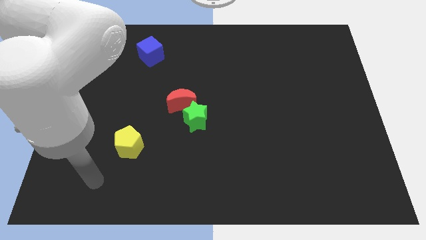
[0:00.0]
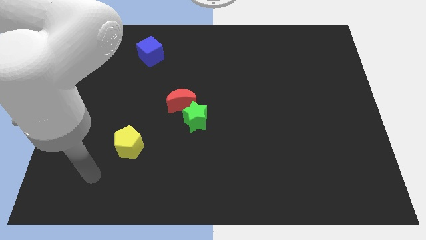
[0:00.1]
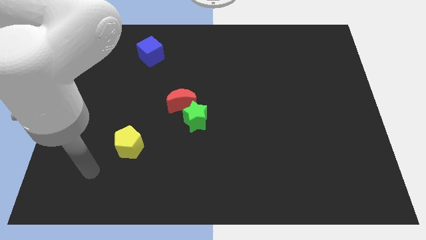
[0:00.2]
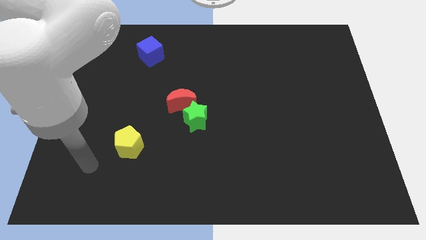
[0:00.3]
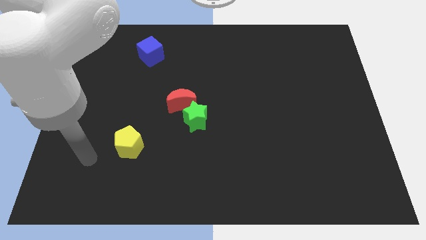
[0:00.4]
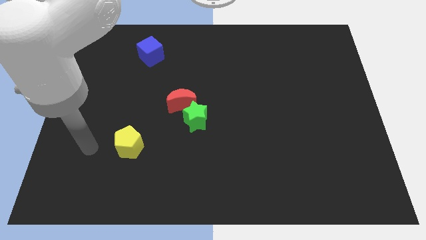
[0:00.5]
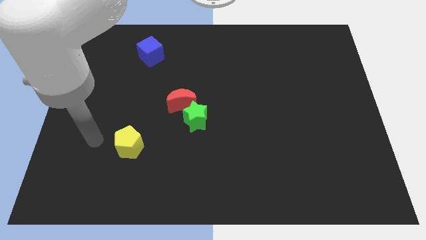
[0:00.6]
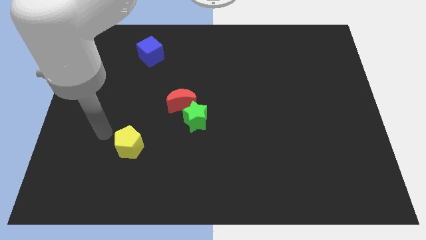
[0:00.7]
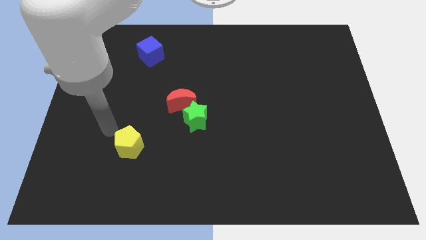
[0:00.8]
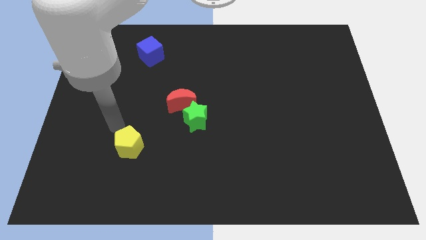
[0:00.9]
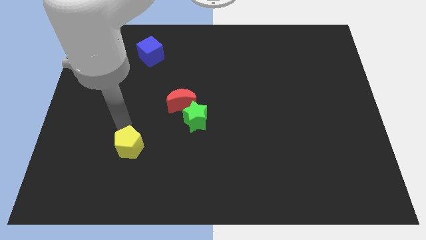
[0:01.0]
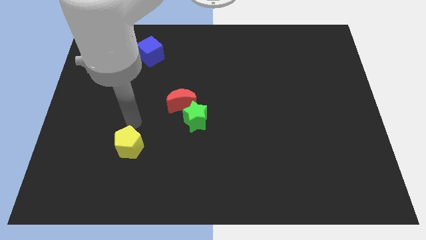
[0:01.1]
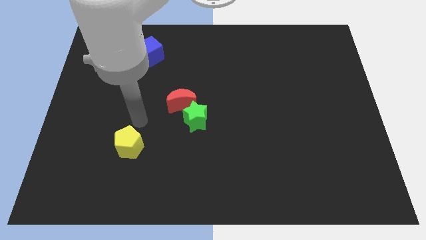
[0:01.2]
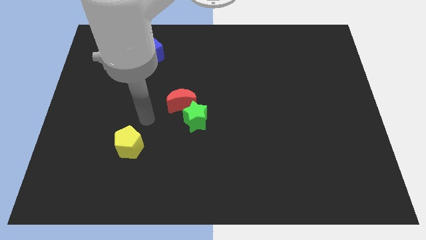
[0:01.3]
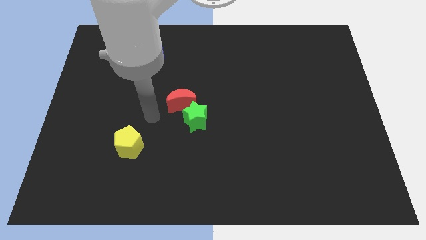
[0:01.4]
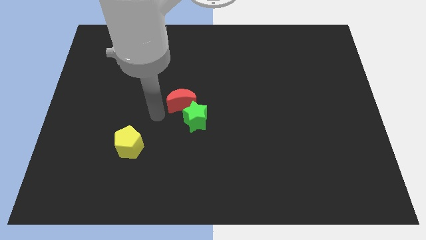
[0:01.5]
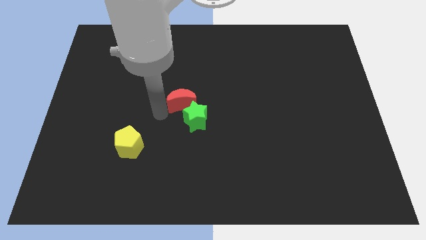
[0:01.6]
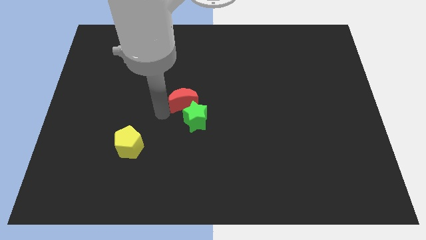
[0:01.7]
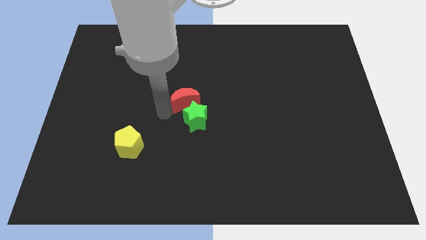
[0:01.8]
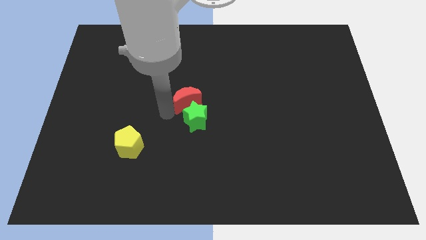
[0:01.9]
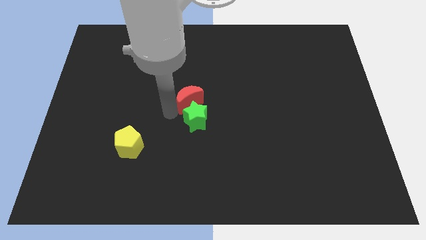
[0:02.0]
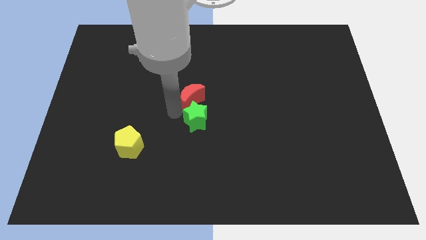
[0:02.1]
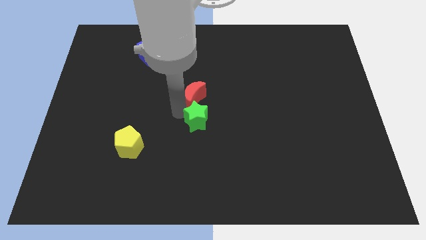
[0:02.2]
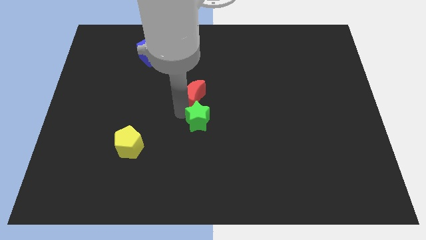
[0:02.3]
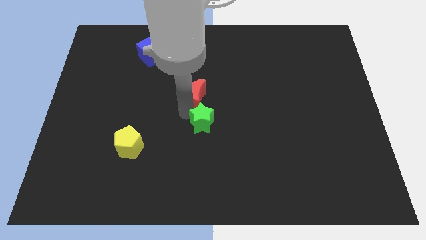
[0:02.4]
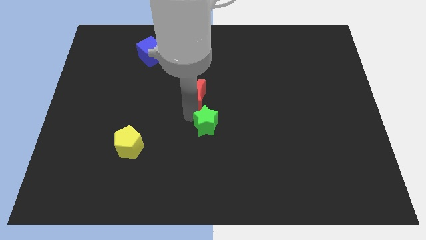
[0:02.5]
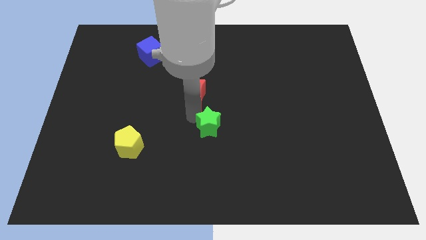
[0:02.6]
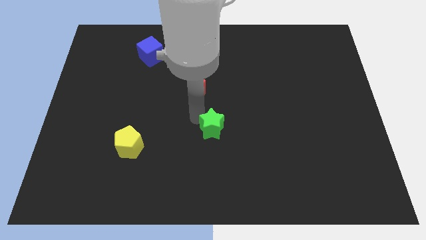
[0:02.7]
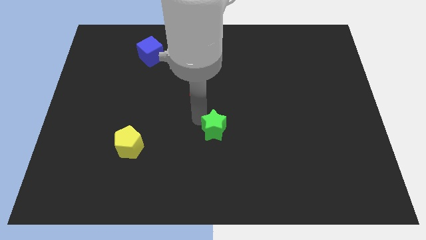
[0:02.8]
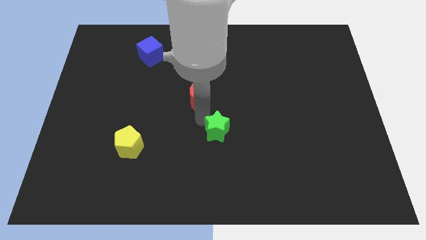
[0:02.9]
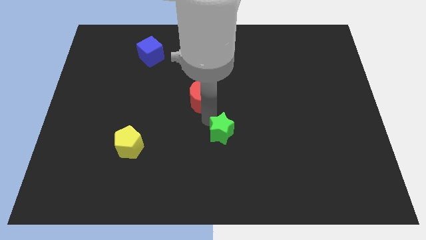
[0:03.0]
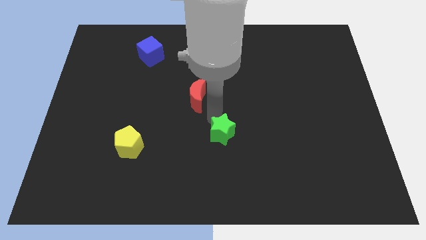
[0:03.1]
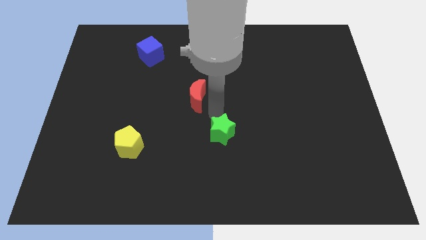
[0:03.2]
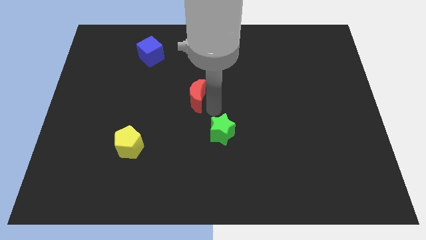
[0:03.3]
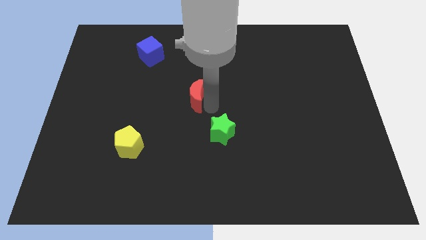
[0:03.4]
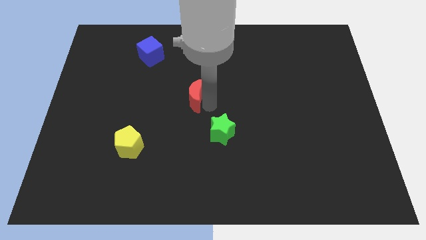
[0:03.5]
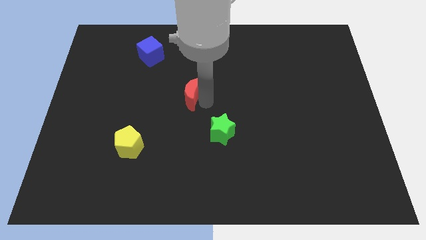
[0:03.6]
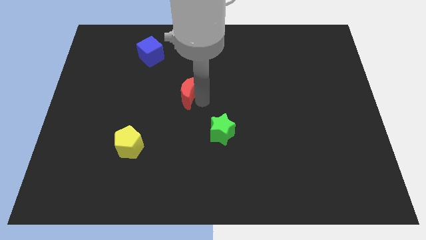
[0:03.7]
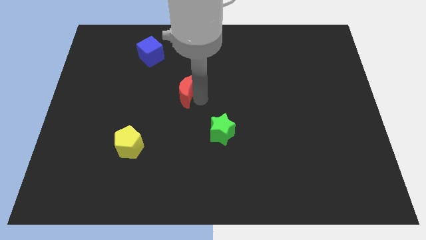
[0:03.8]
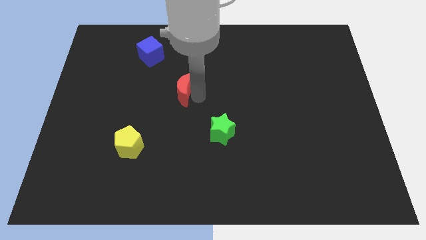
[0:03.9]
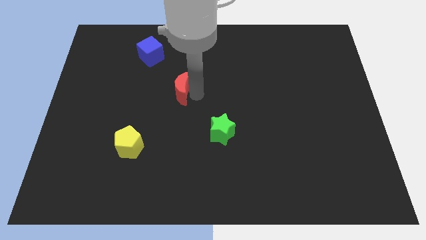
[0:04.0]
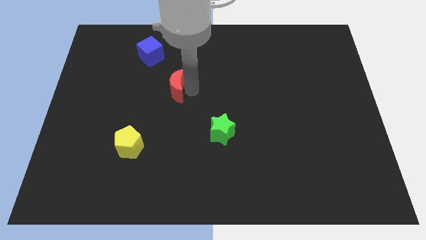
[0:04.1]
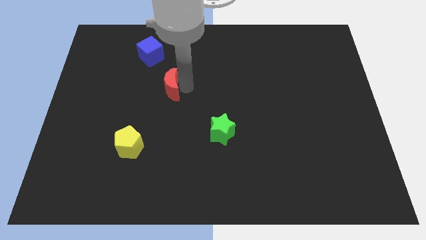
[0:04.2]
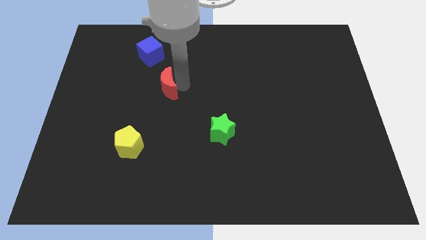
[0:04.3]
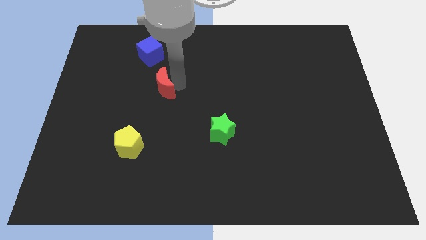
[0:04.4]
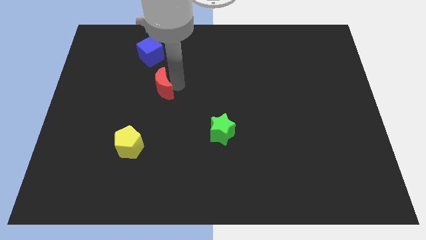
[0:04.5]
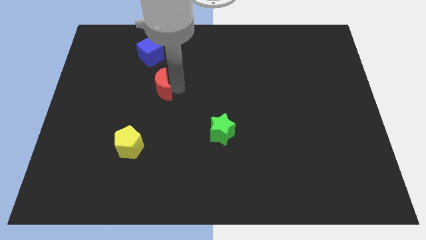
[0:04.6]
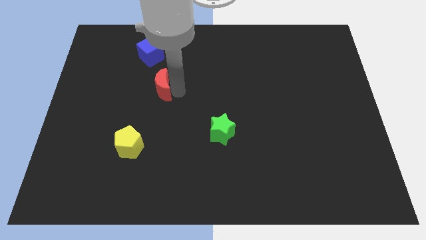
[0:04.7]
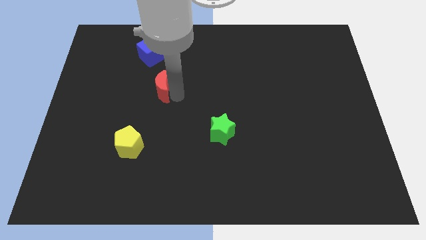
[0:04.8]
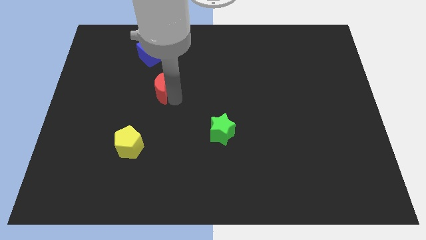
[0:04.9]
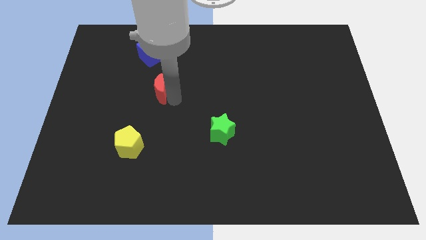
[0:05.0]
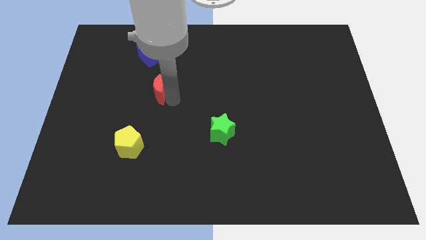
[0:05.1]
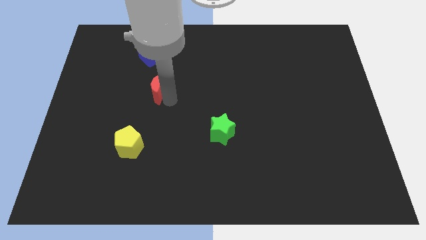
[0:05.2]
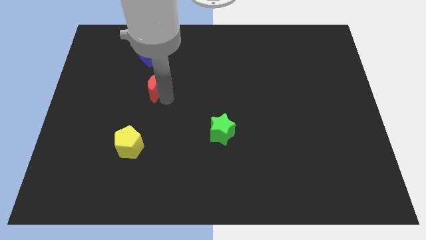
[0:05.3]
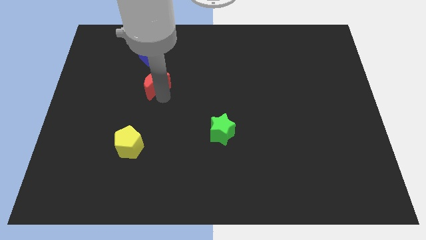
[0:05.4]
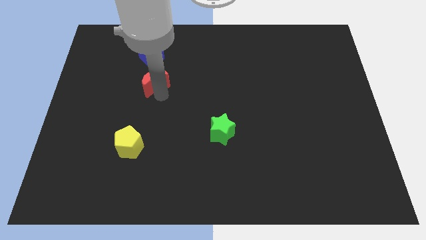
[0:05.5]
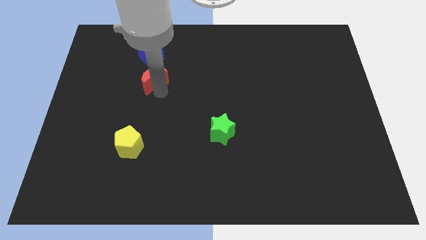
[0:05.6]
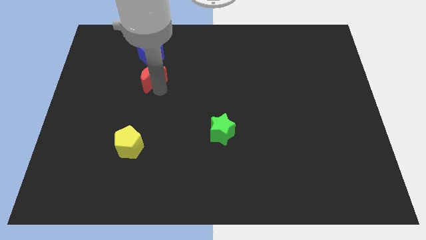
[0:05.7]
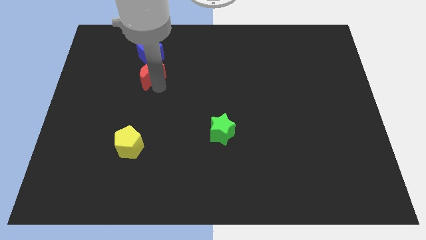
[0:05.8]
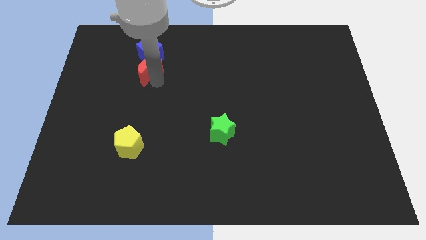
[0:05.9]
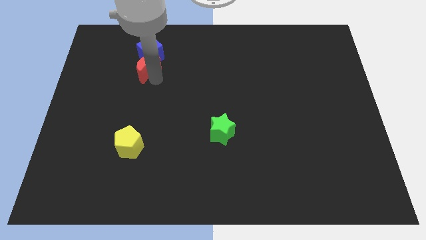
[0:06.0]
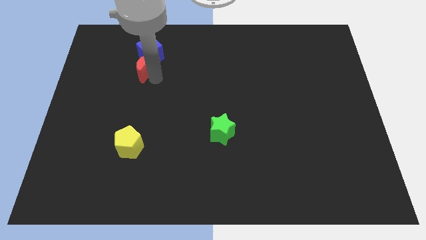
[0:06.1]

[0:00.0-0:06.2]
slide the red block next to the blue block

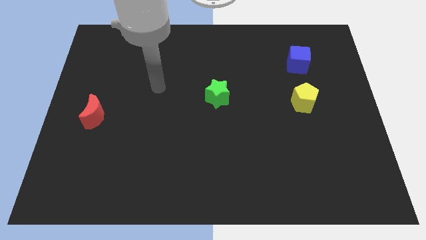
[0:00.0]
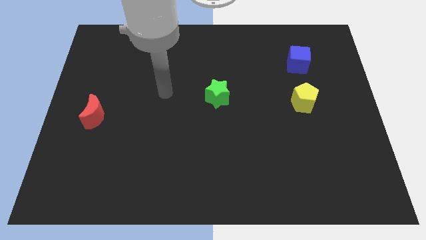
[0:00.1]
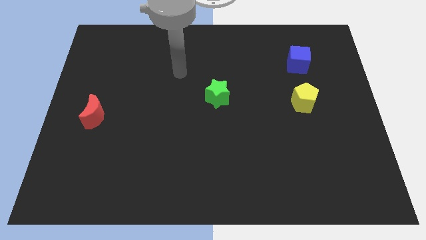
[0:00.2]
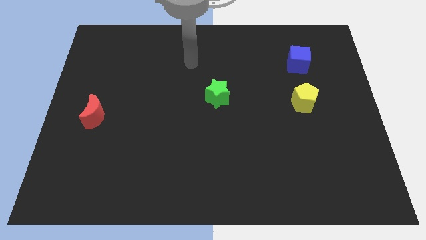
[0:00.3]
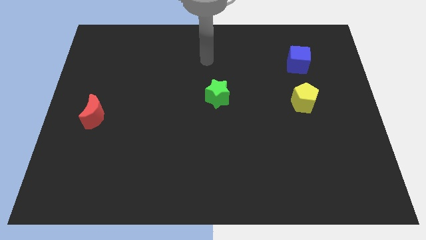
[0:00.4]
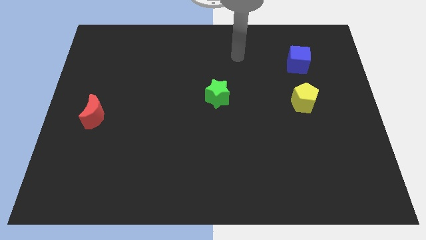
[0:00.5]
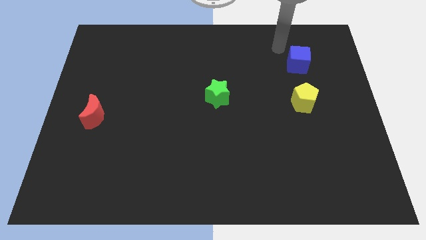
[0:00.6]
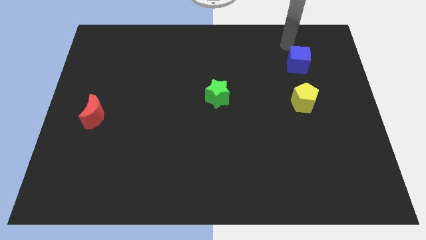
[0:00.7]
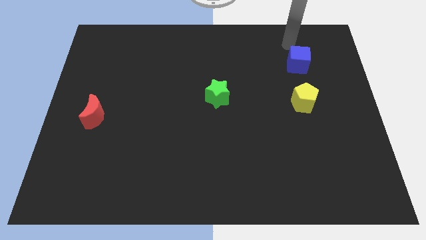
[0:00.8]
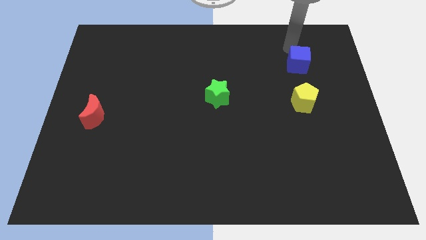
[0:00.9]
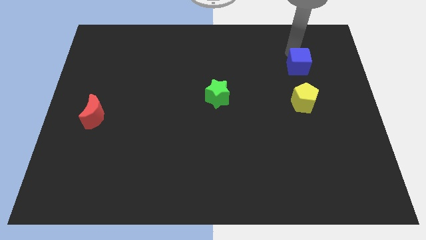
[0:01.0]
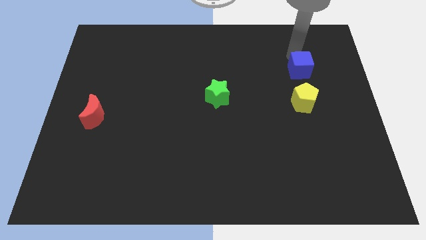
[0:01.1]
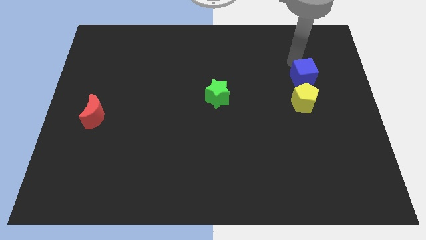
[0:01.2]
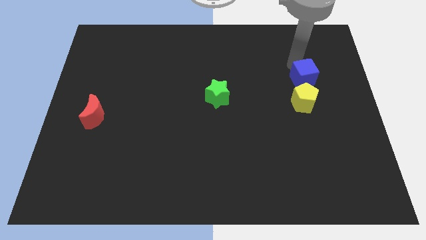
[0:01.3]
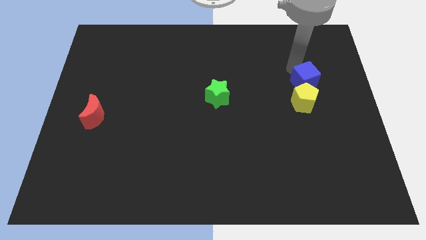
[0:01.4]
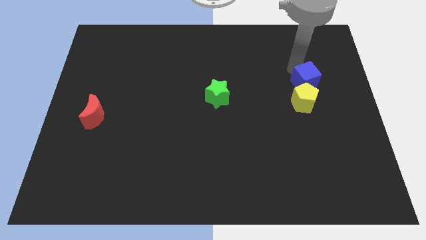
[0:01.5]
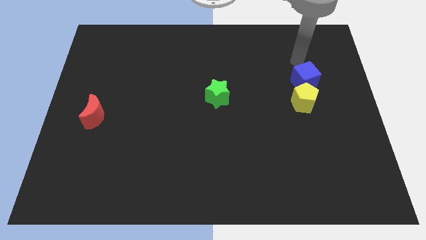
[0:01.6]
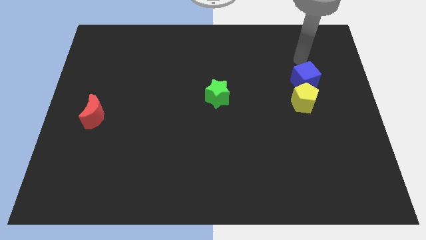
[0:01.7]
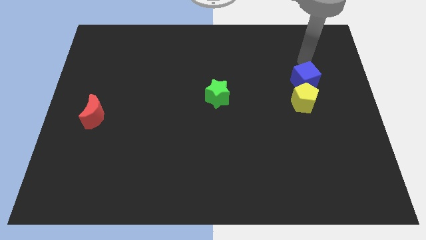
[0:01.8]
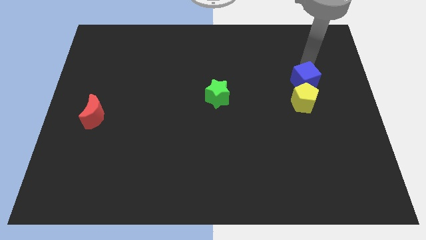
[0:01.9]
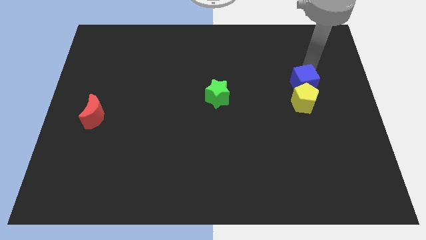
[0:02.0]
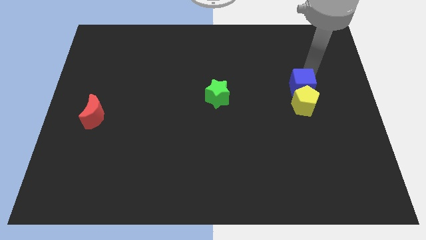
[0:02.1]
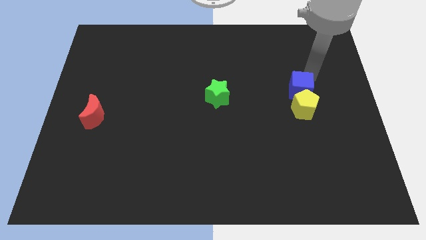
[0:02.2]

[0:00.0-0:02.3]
move the blue block close to the pentagon
